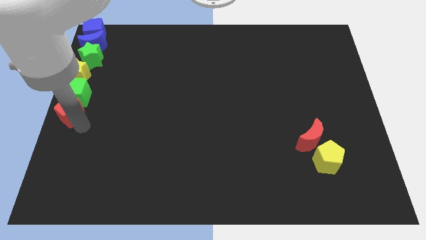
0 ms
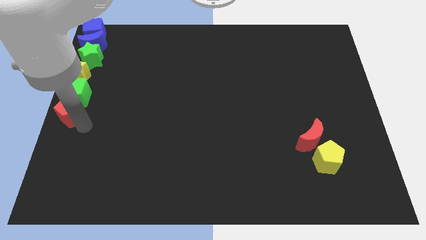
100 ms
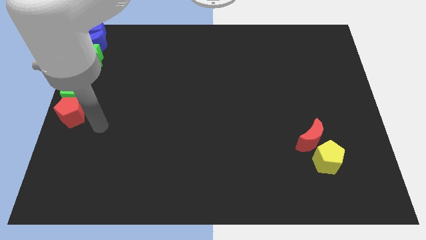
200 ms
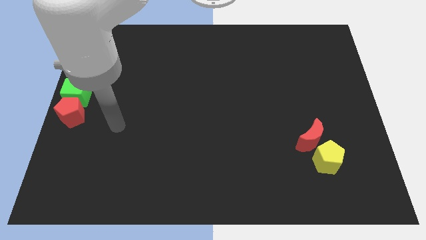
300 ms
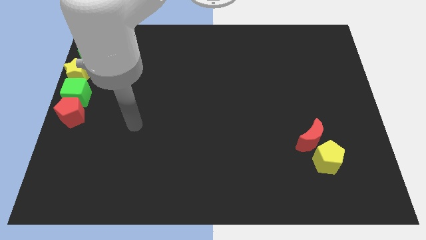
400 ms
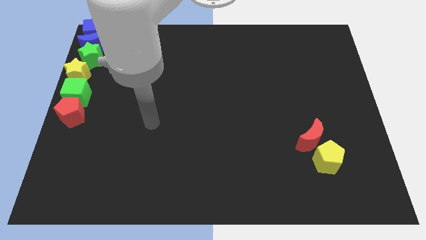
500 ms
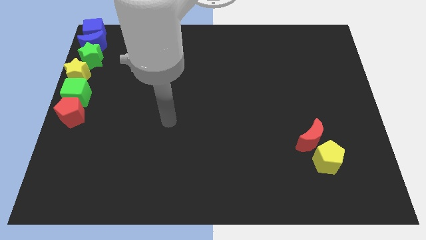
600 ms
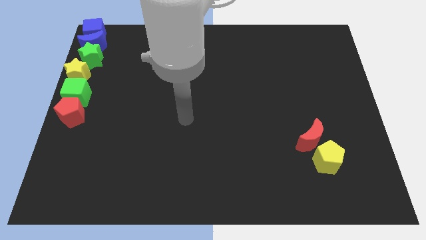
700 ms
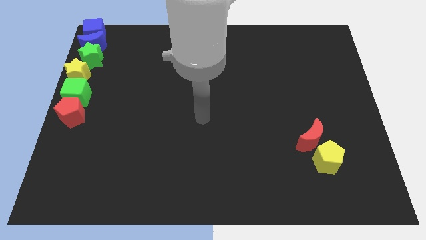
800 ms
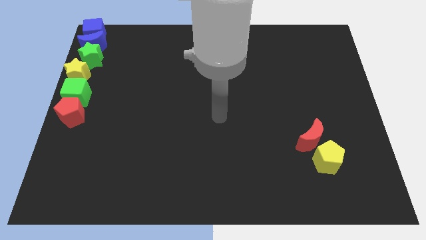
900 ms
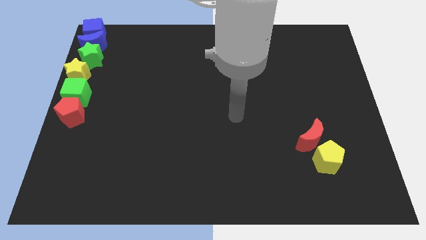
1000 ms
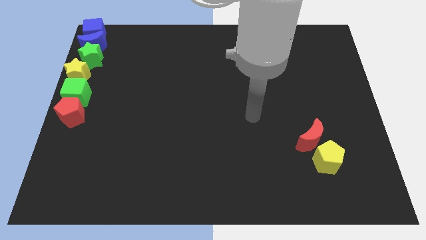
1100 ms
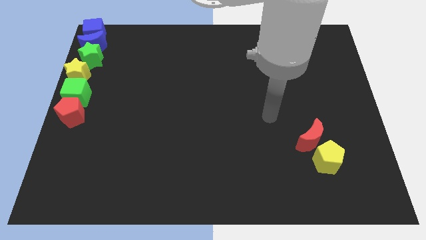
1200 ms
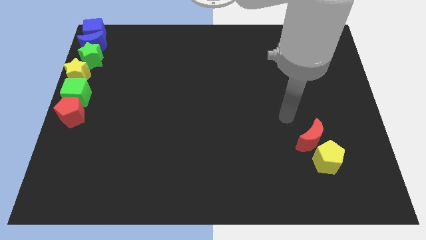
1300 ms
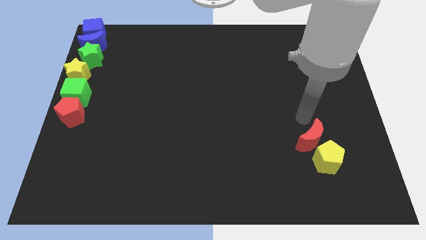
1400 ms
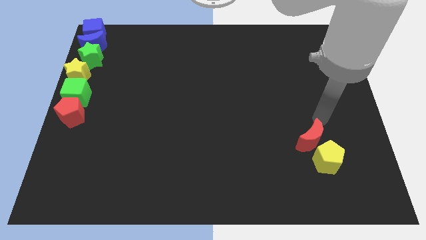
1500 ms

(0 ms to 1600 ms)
move your arm towards the right side of the board

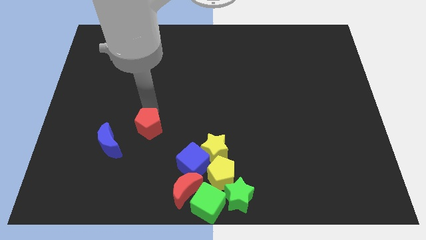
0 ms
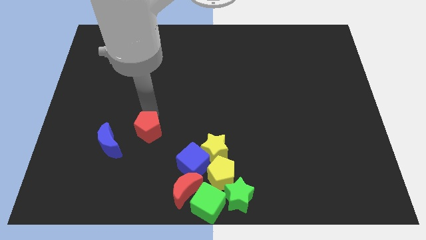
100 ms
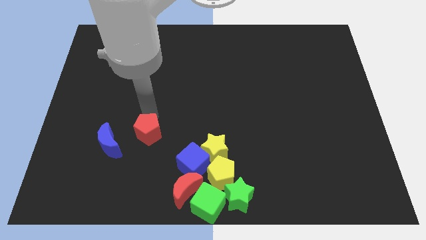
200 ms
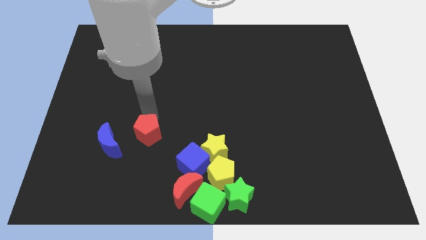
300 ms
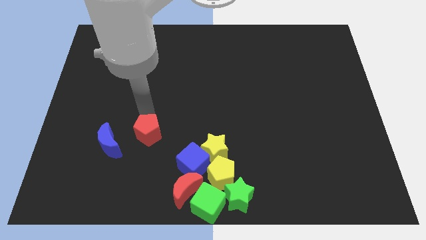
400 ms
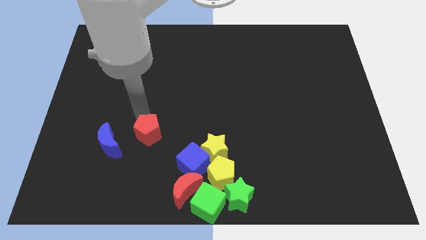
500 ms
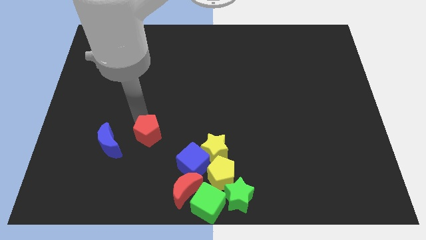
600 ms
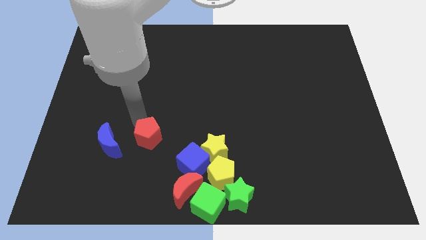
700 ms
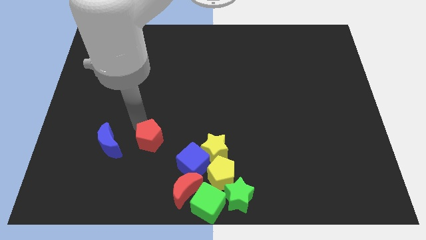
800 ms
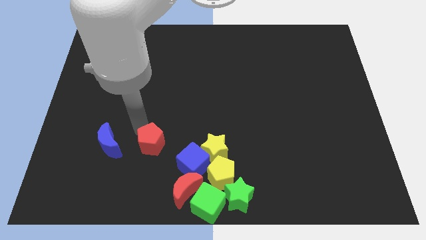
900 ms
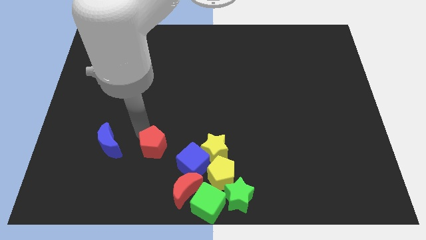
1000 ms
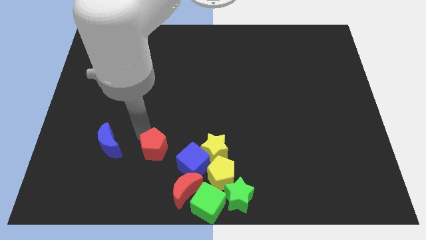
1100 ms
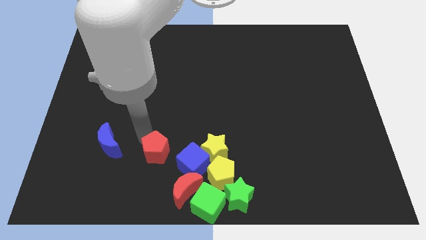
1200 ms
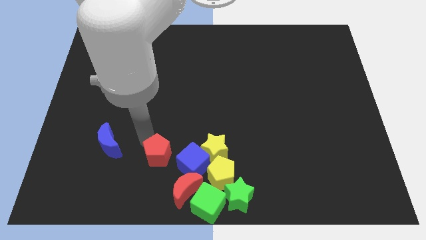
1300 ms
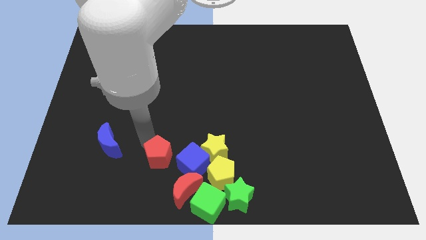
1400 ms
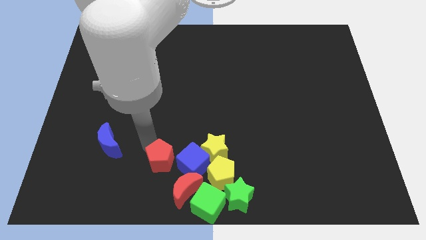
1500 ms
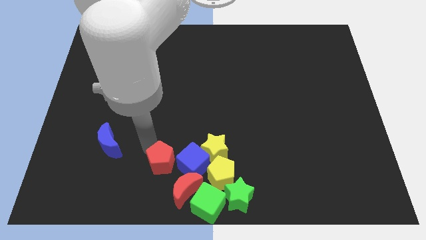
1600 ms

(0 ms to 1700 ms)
push the red pentagon closer to the red moon

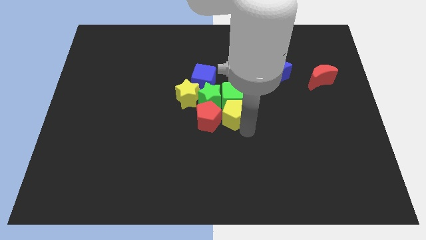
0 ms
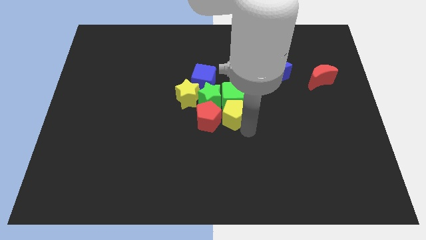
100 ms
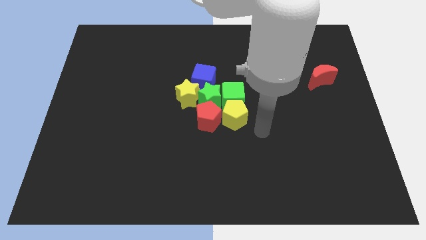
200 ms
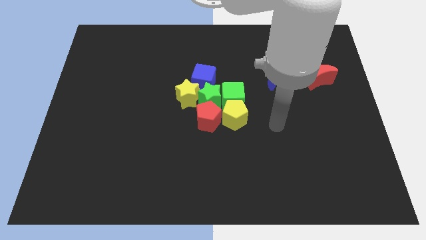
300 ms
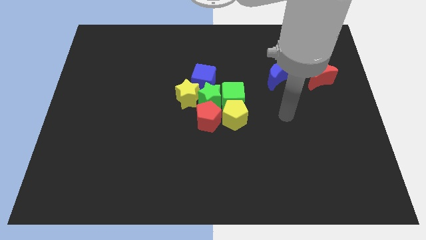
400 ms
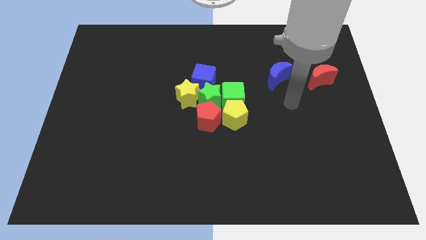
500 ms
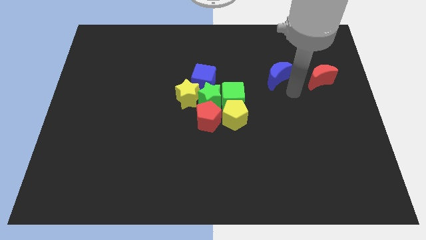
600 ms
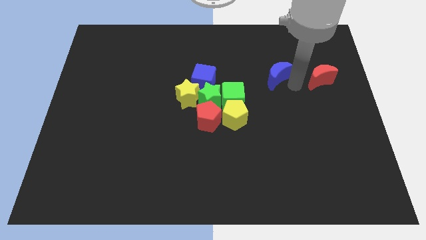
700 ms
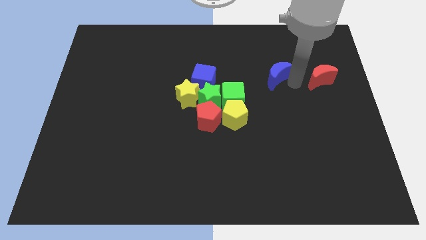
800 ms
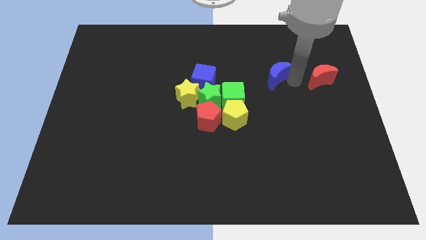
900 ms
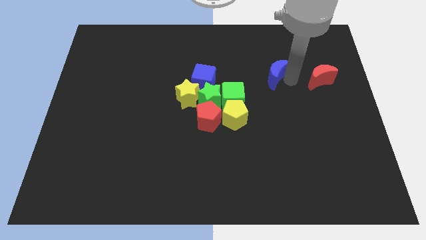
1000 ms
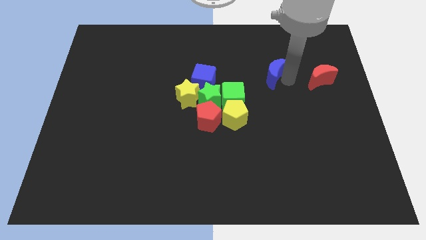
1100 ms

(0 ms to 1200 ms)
move your arm away from yellow pentagon

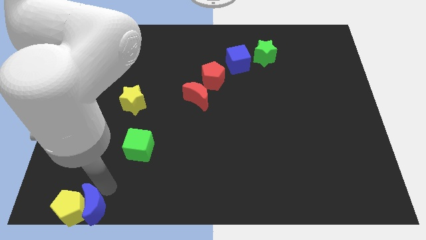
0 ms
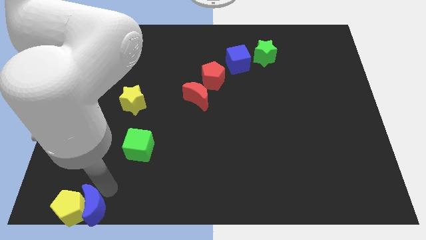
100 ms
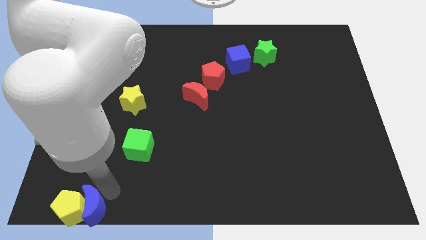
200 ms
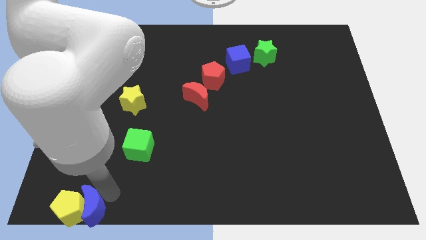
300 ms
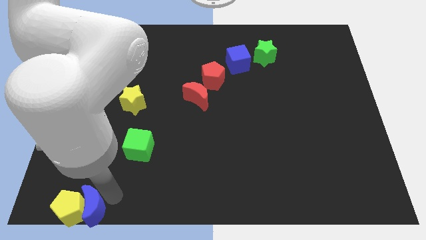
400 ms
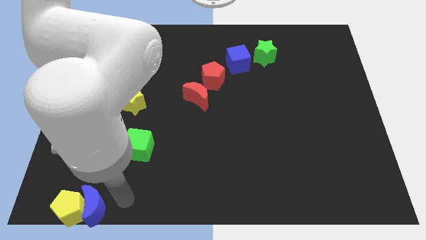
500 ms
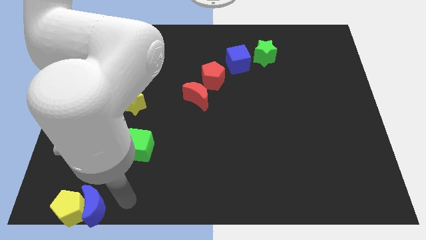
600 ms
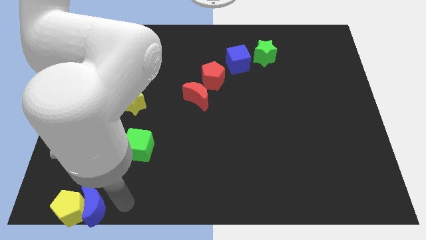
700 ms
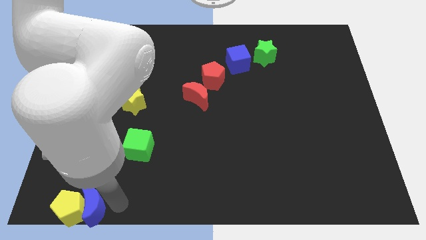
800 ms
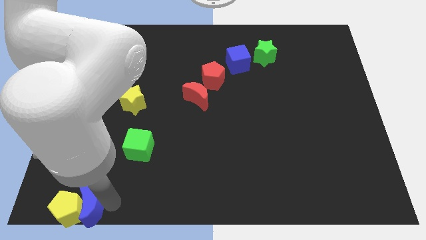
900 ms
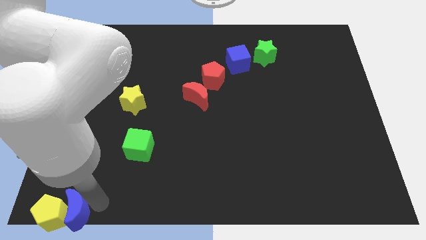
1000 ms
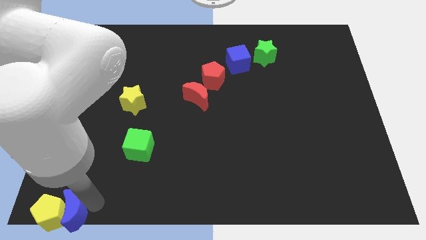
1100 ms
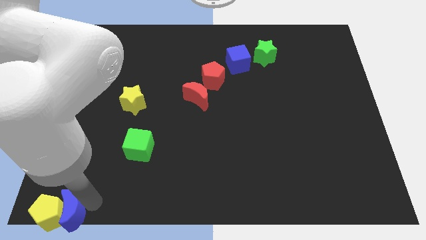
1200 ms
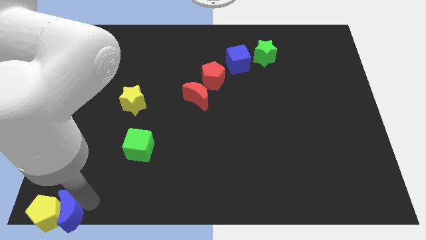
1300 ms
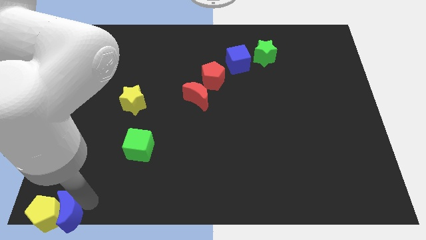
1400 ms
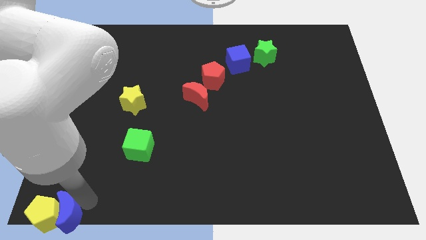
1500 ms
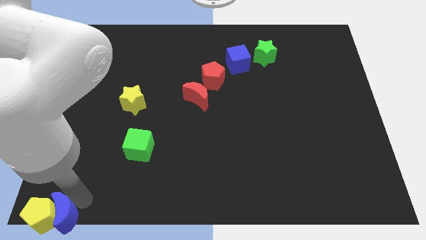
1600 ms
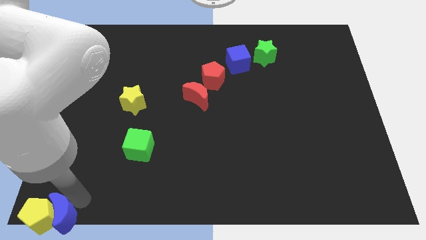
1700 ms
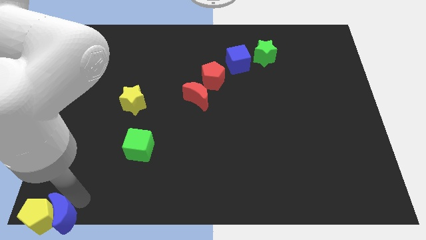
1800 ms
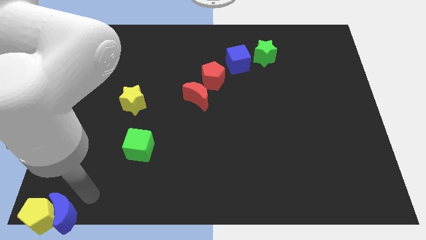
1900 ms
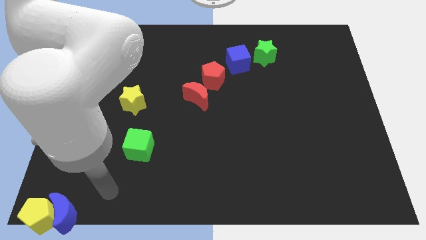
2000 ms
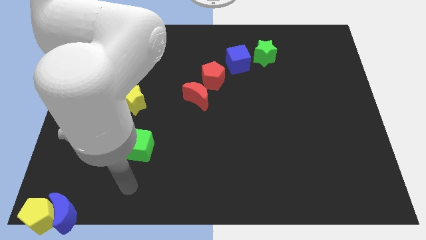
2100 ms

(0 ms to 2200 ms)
move the blue crescent along with yellow pentagon to the bottom left corner of the board

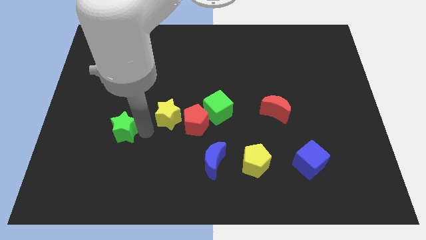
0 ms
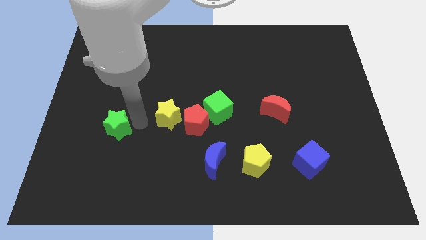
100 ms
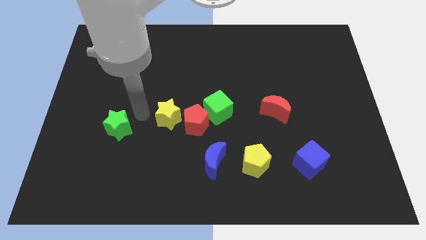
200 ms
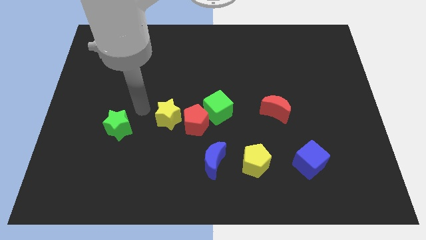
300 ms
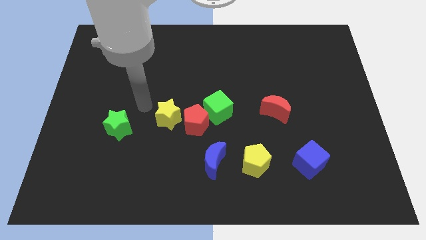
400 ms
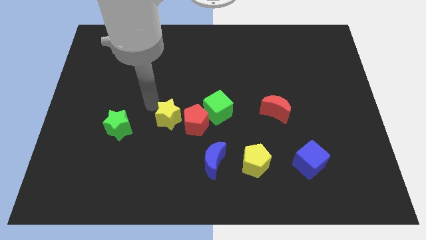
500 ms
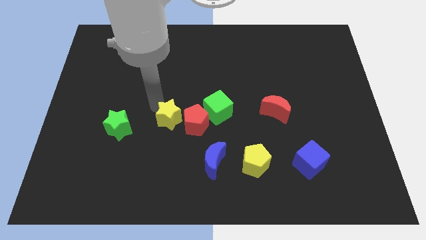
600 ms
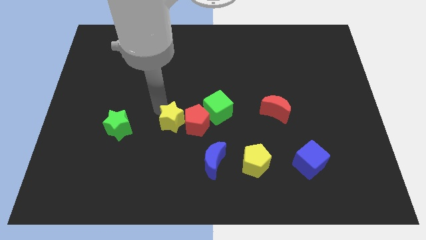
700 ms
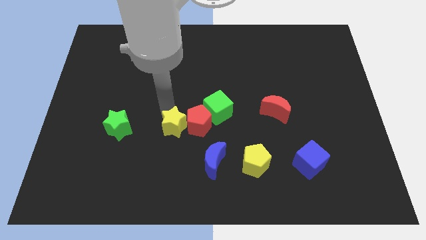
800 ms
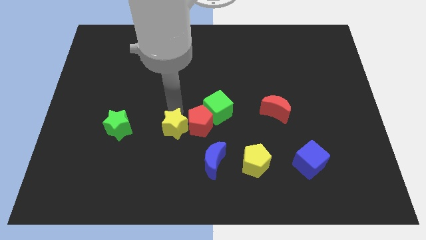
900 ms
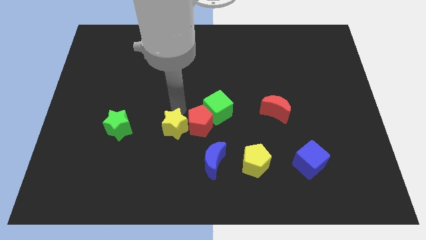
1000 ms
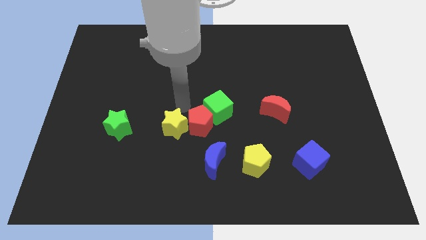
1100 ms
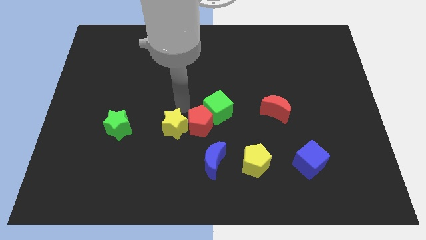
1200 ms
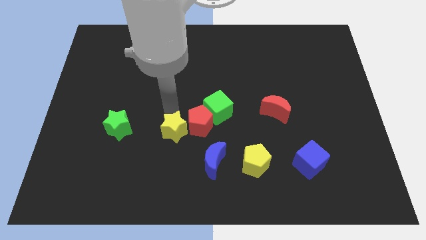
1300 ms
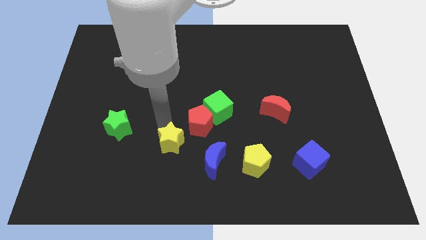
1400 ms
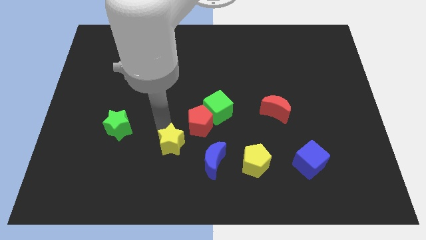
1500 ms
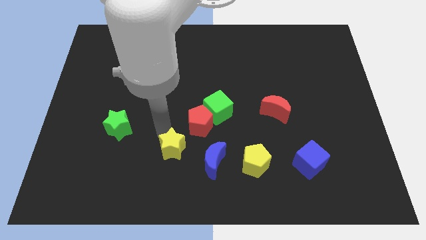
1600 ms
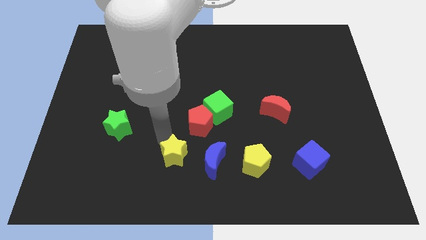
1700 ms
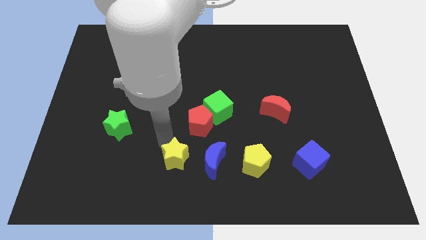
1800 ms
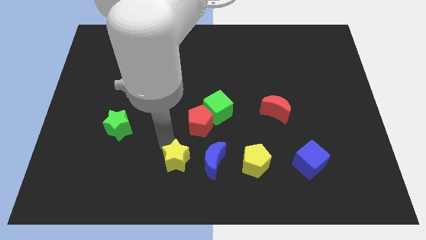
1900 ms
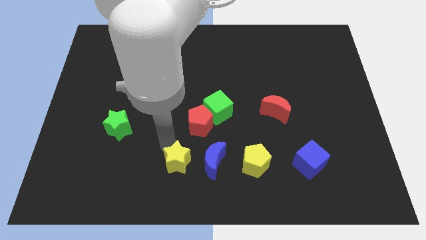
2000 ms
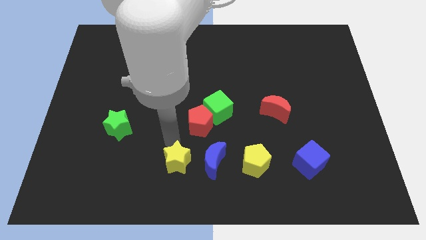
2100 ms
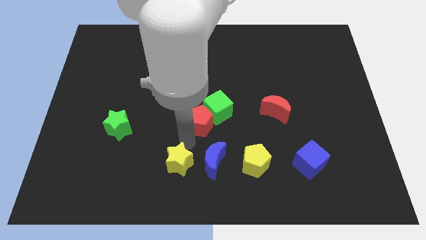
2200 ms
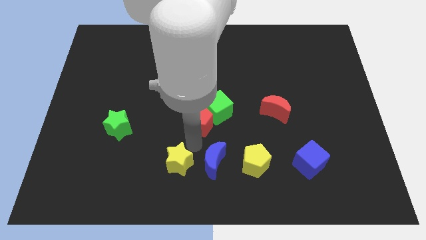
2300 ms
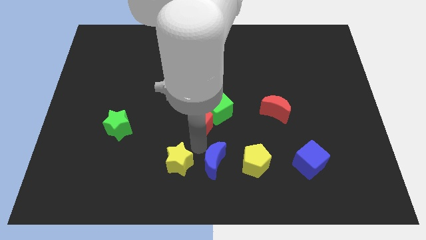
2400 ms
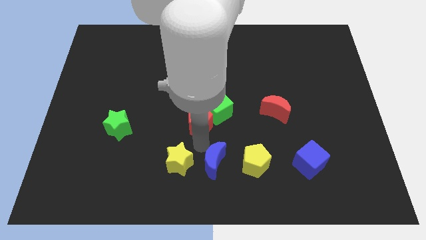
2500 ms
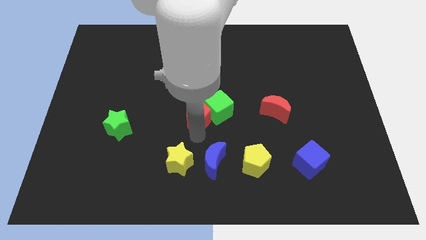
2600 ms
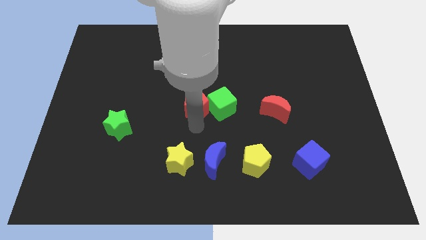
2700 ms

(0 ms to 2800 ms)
move the yellow star to the left side of the blue crescent
